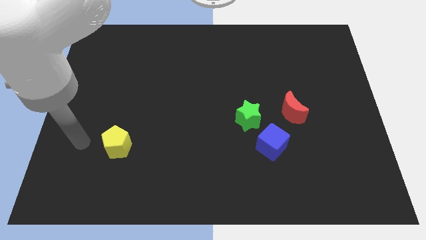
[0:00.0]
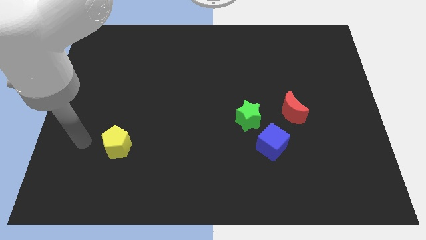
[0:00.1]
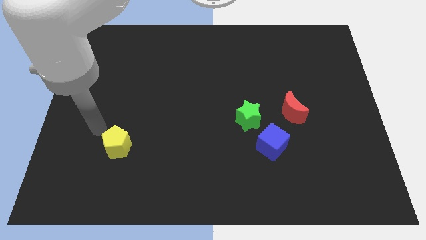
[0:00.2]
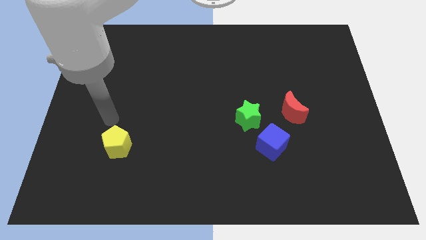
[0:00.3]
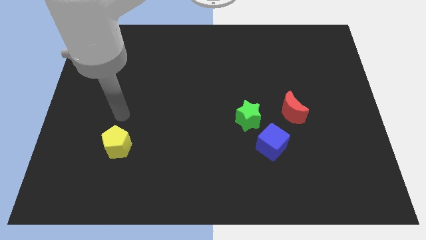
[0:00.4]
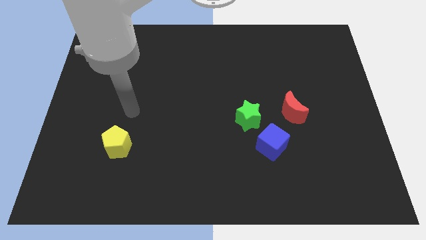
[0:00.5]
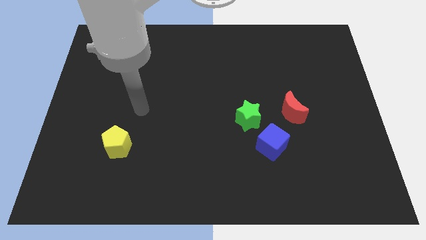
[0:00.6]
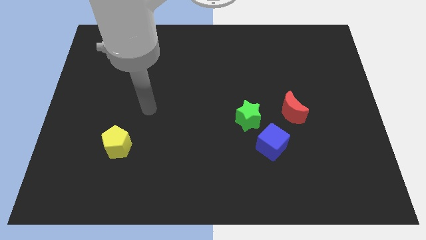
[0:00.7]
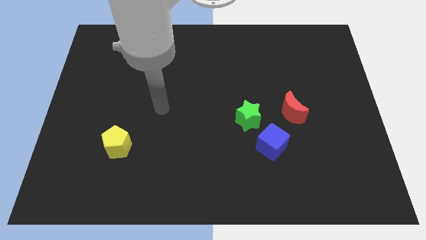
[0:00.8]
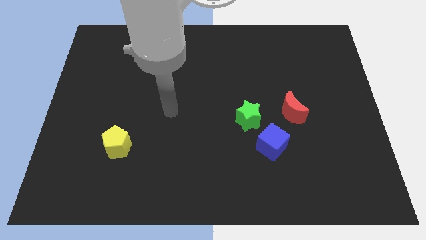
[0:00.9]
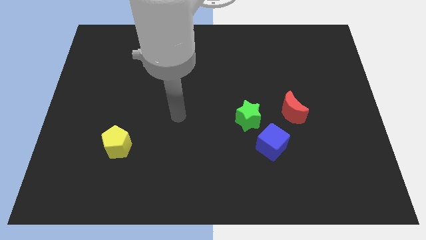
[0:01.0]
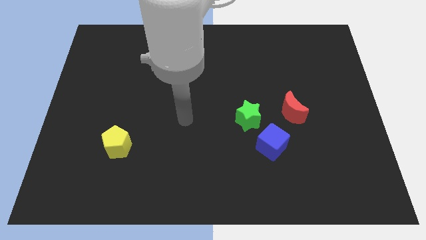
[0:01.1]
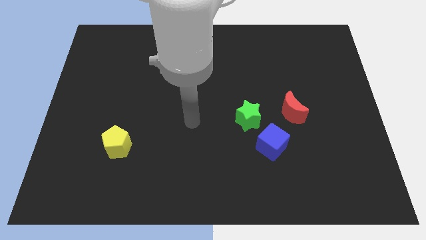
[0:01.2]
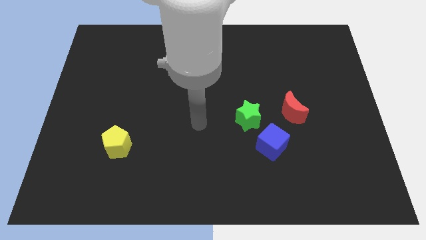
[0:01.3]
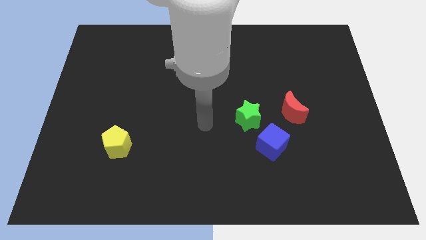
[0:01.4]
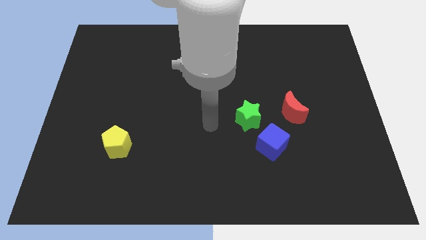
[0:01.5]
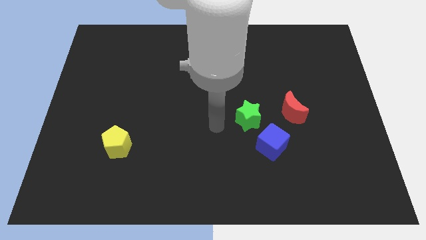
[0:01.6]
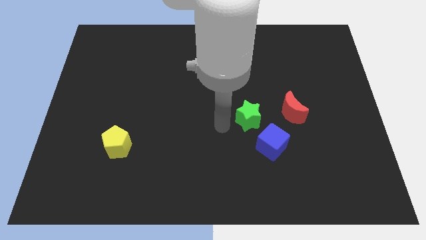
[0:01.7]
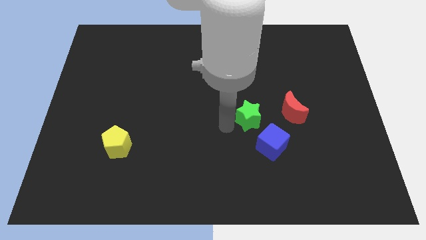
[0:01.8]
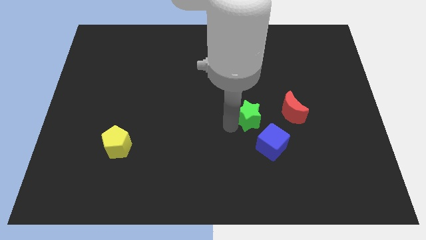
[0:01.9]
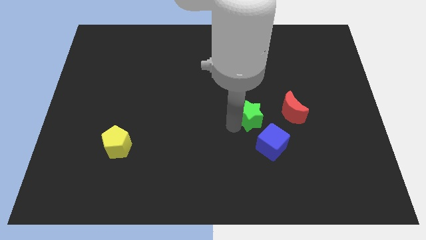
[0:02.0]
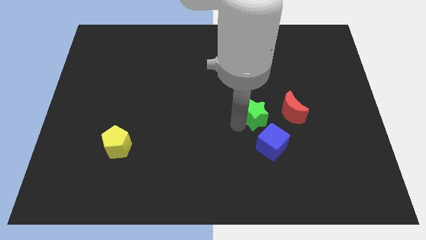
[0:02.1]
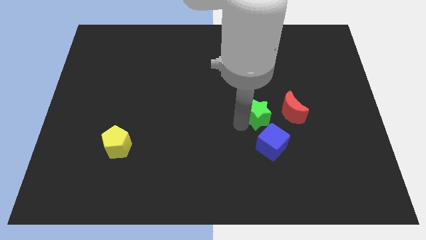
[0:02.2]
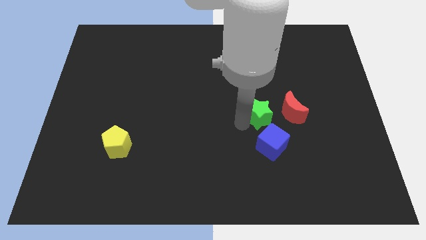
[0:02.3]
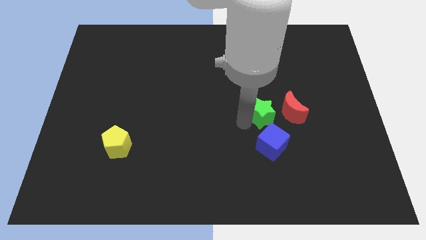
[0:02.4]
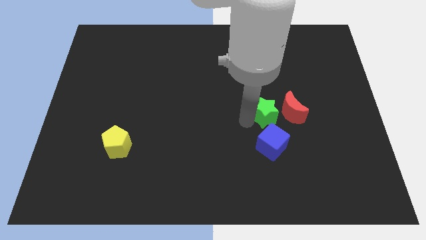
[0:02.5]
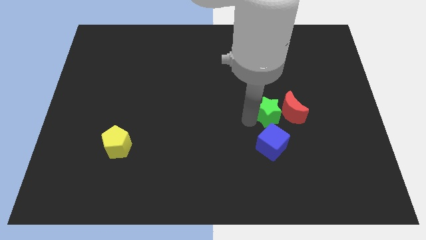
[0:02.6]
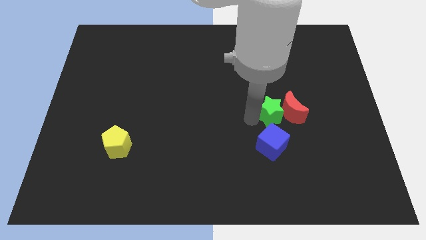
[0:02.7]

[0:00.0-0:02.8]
move the green star close to the moon

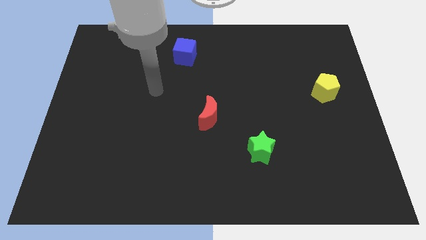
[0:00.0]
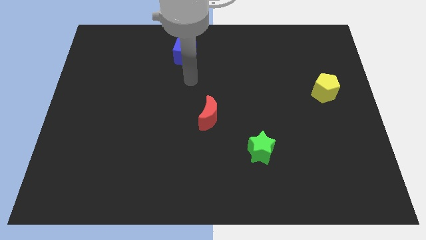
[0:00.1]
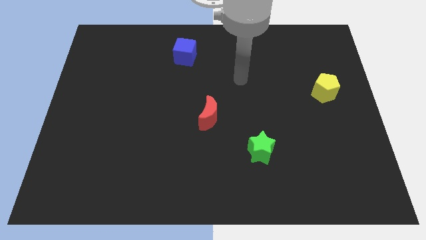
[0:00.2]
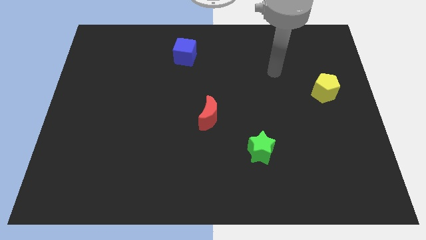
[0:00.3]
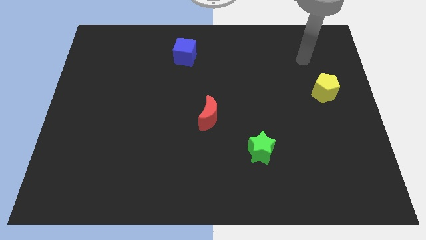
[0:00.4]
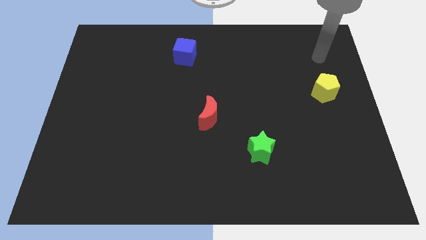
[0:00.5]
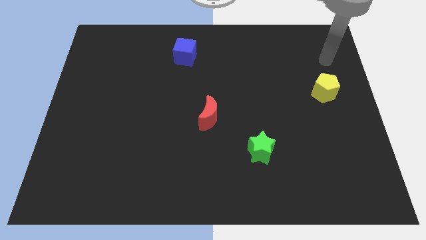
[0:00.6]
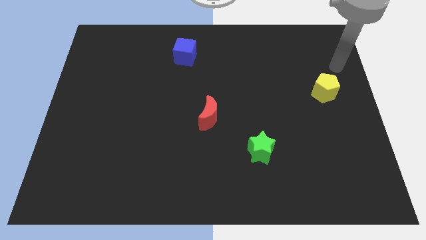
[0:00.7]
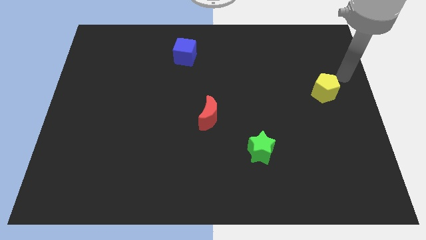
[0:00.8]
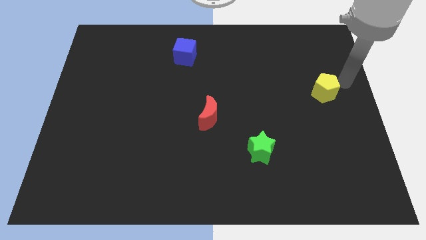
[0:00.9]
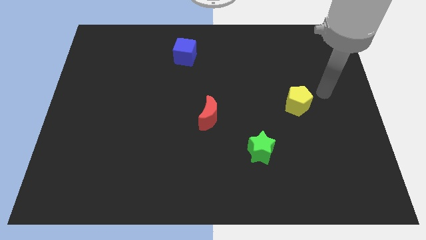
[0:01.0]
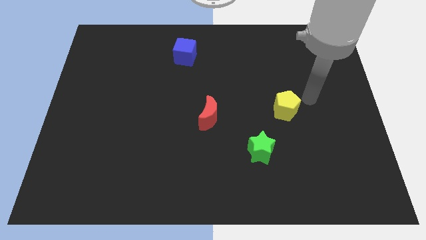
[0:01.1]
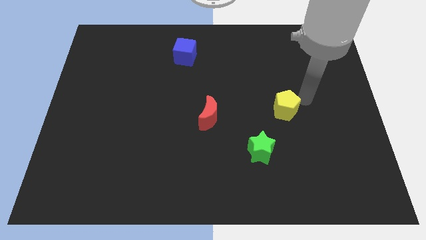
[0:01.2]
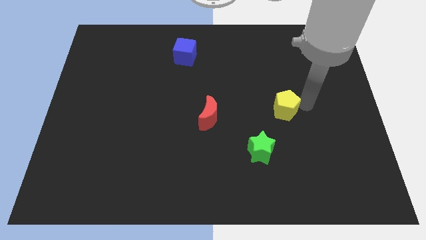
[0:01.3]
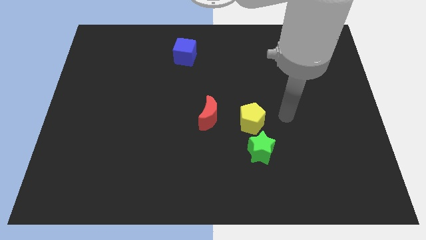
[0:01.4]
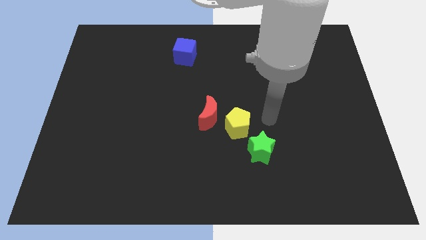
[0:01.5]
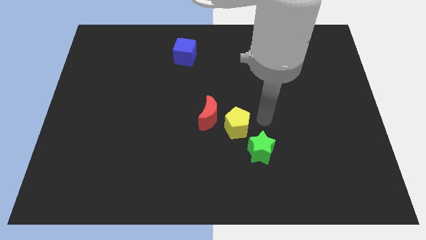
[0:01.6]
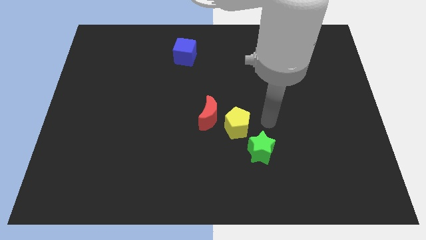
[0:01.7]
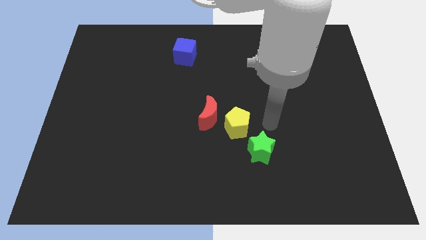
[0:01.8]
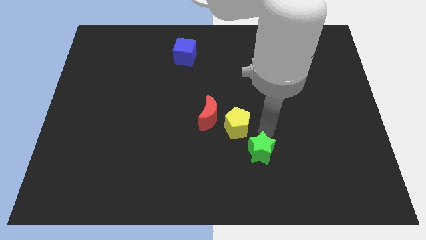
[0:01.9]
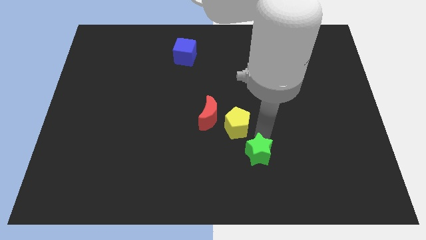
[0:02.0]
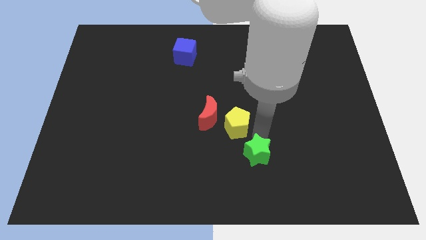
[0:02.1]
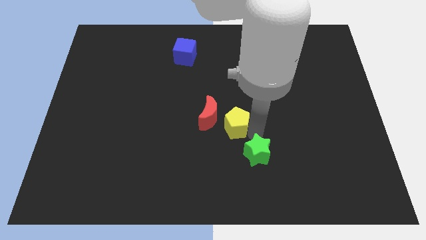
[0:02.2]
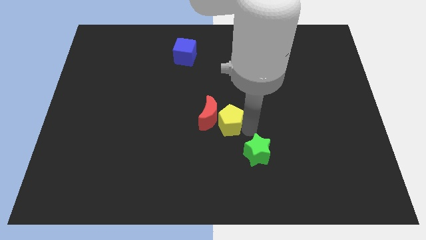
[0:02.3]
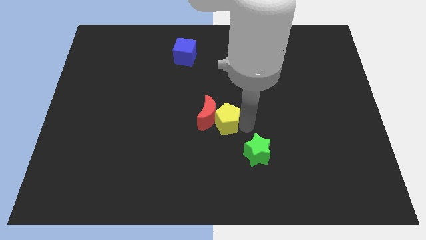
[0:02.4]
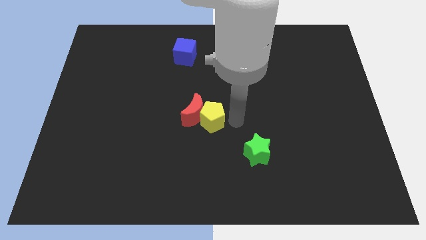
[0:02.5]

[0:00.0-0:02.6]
move the yellow pentagon close to the moon

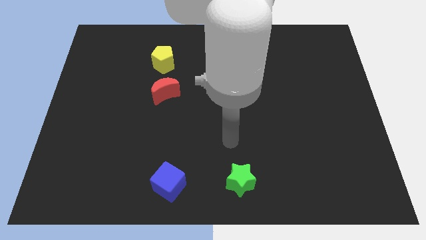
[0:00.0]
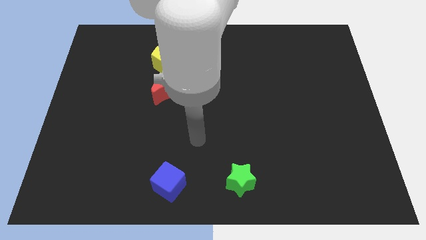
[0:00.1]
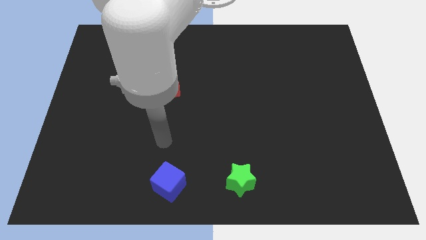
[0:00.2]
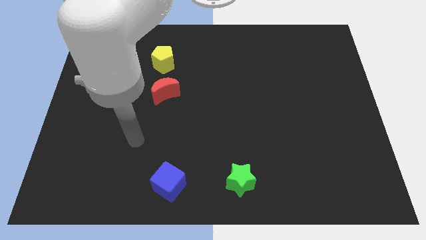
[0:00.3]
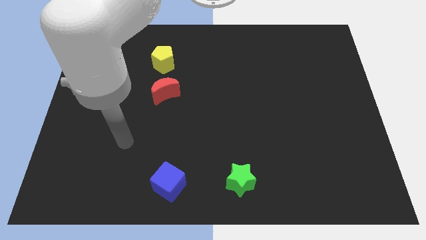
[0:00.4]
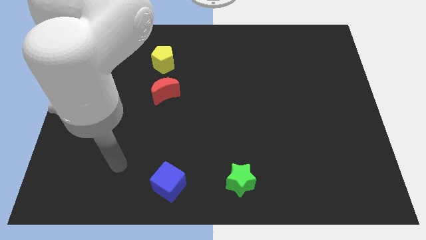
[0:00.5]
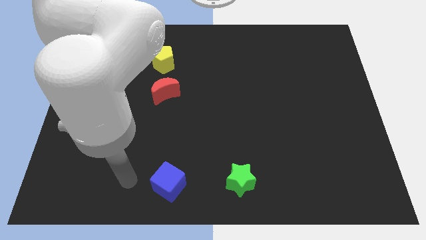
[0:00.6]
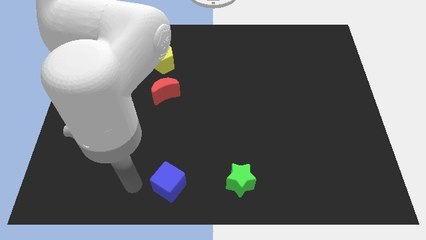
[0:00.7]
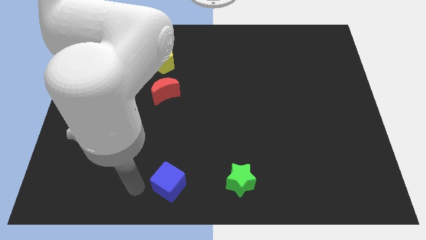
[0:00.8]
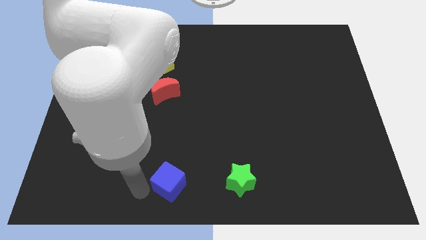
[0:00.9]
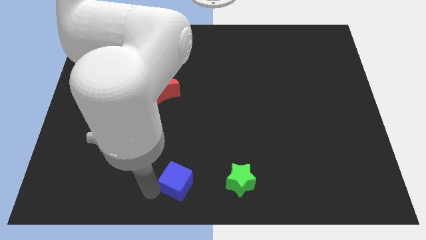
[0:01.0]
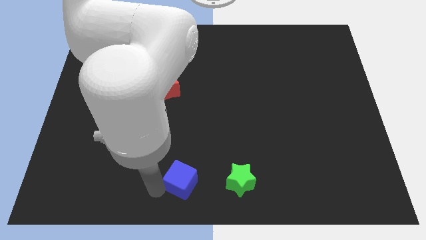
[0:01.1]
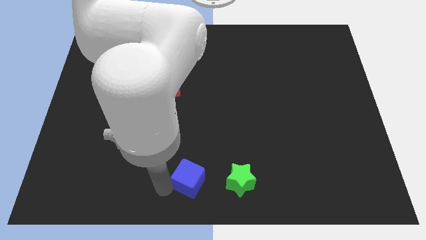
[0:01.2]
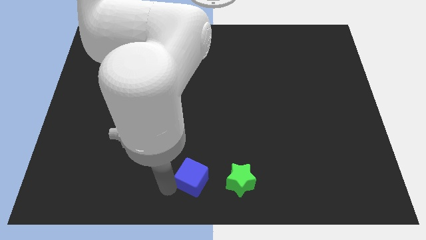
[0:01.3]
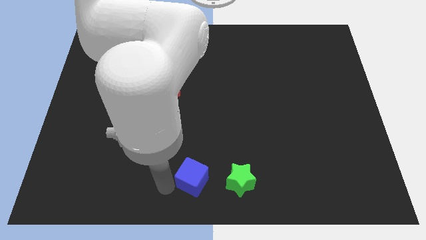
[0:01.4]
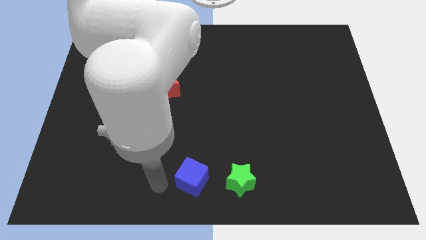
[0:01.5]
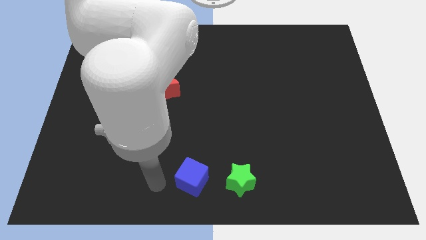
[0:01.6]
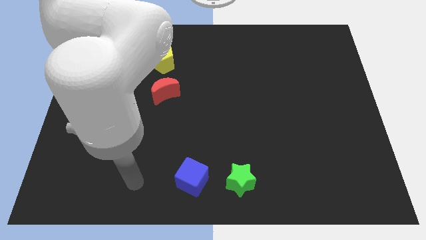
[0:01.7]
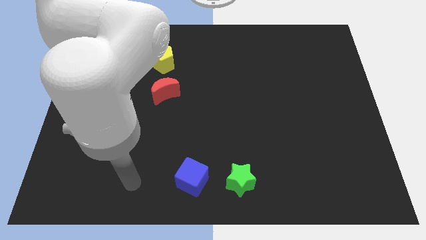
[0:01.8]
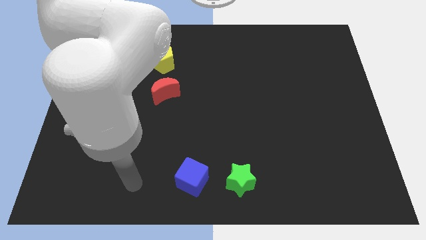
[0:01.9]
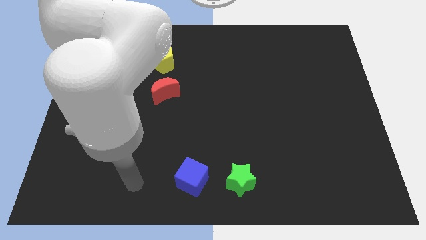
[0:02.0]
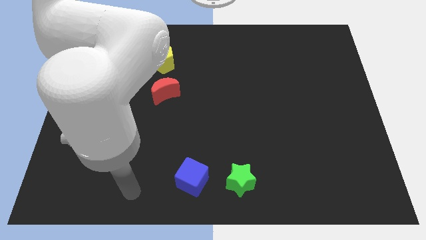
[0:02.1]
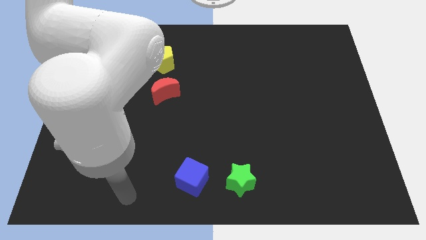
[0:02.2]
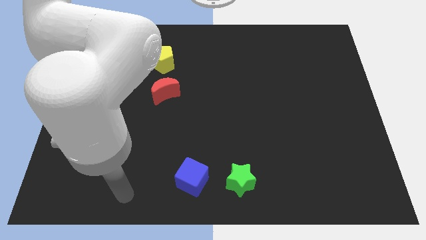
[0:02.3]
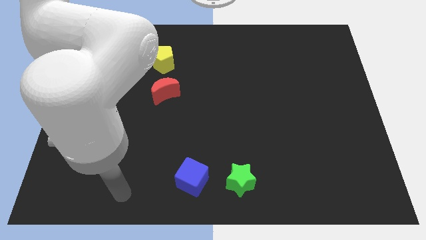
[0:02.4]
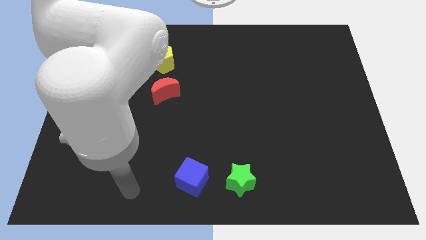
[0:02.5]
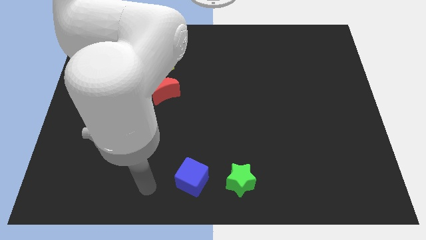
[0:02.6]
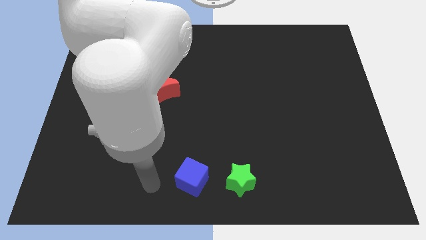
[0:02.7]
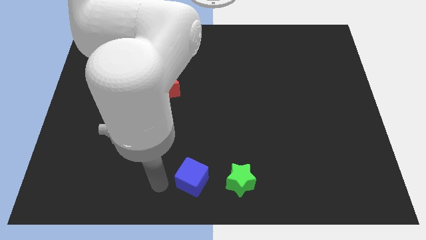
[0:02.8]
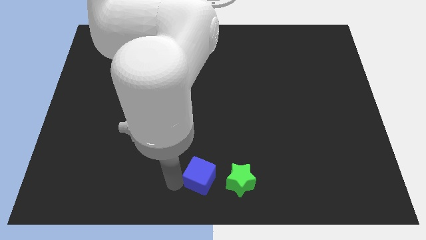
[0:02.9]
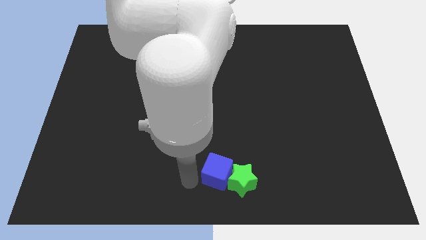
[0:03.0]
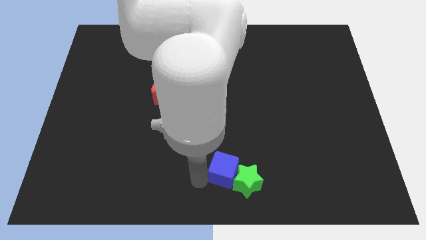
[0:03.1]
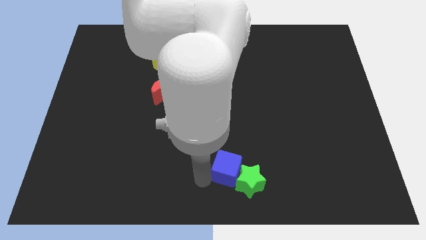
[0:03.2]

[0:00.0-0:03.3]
slide the blue block close to the green star
